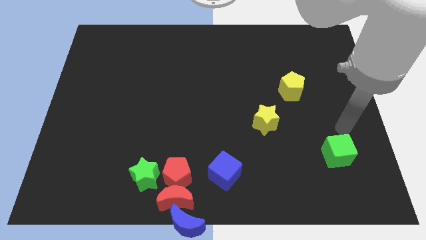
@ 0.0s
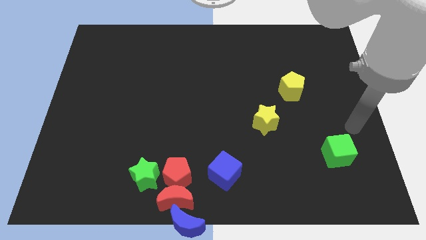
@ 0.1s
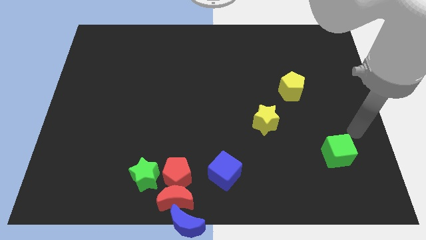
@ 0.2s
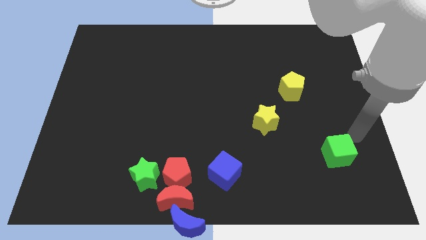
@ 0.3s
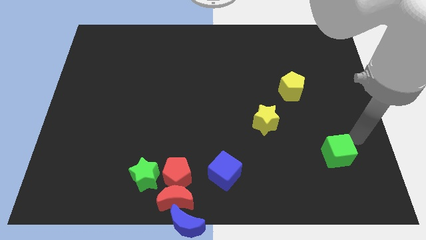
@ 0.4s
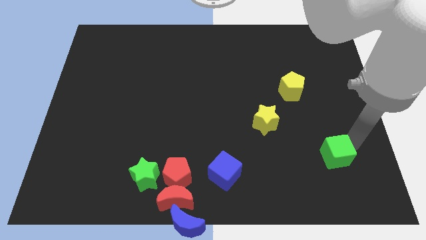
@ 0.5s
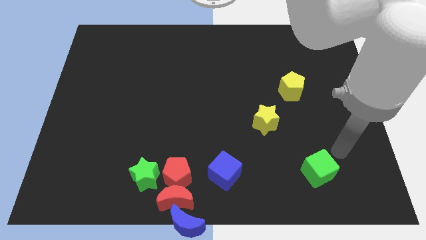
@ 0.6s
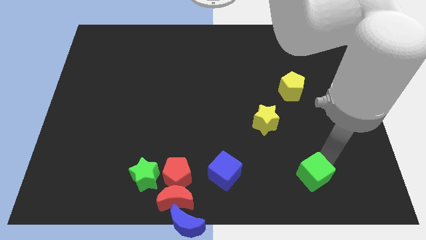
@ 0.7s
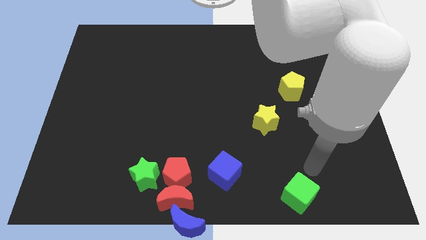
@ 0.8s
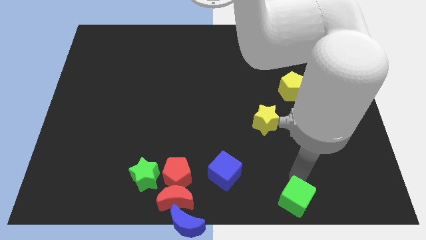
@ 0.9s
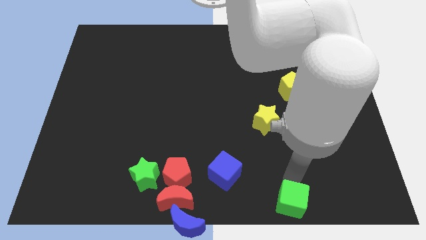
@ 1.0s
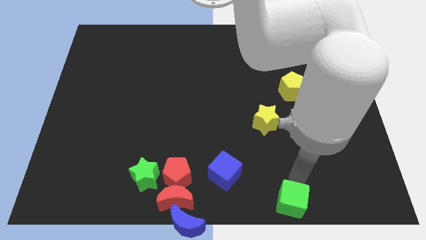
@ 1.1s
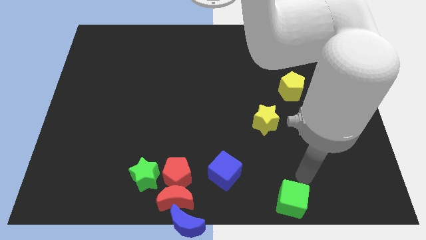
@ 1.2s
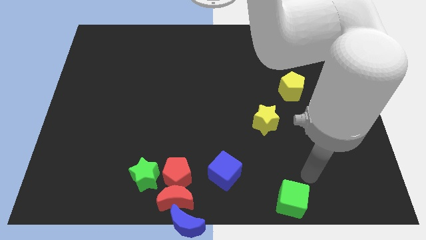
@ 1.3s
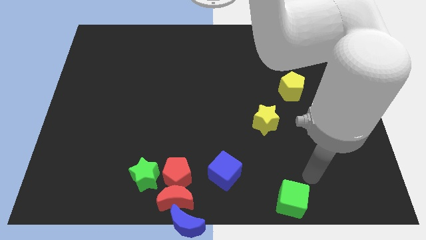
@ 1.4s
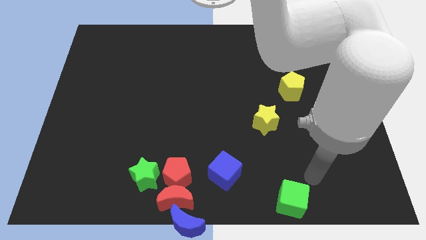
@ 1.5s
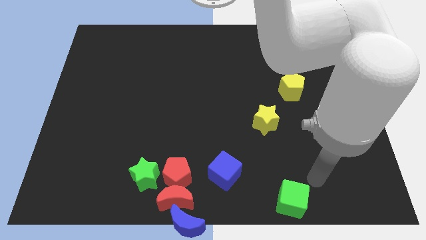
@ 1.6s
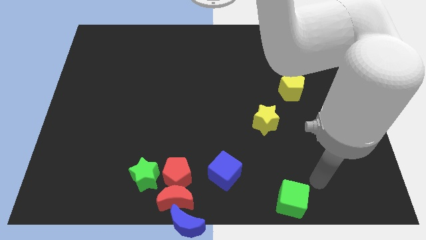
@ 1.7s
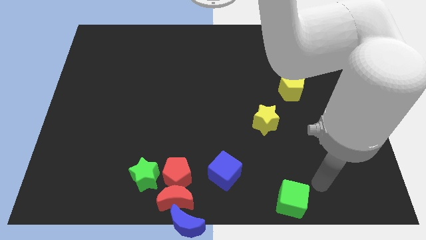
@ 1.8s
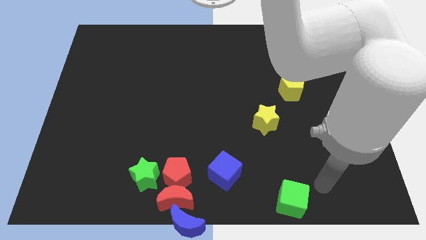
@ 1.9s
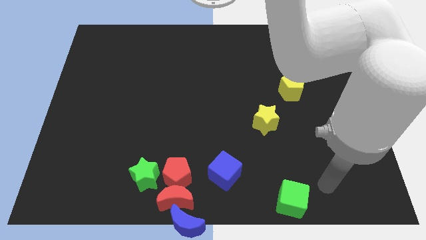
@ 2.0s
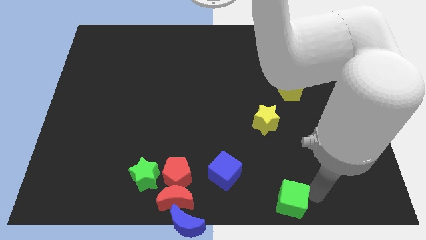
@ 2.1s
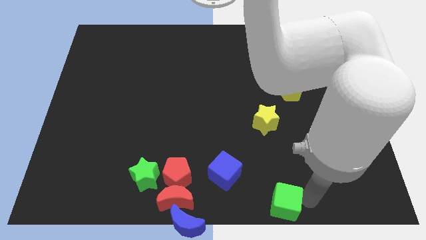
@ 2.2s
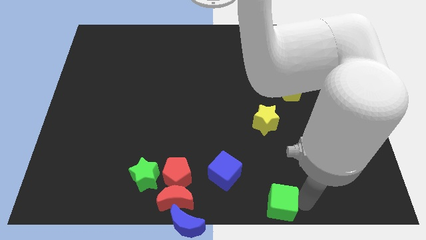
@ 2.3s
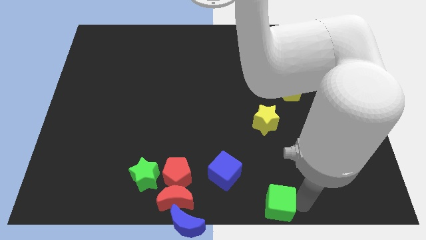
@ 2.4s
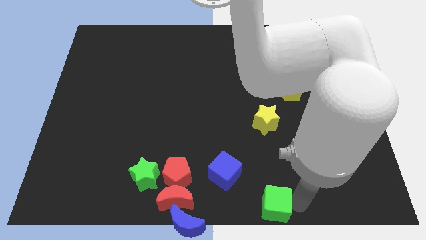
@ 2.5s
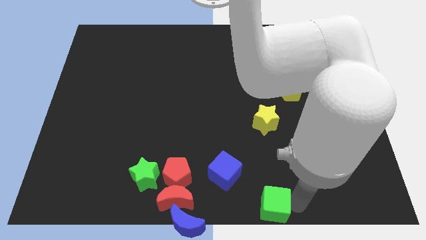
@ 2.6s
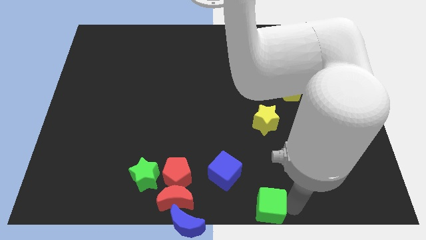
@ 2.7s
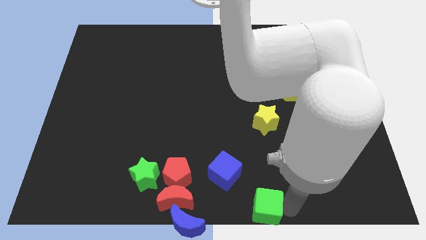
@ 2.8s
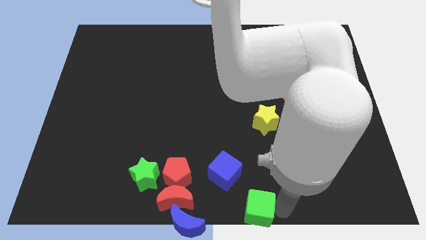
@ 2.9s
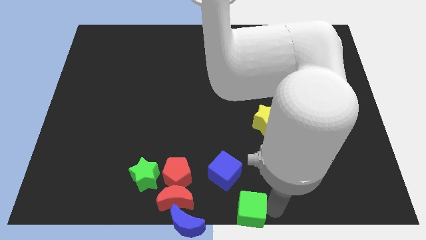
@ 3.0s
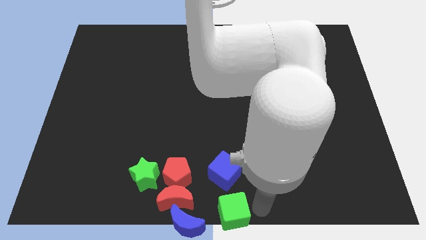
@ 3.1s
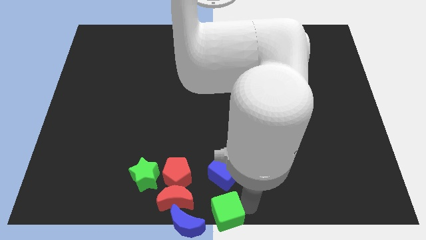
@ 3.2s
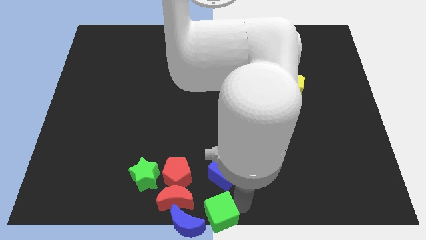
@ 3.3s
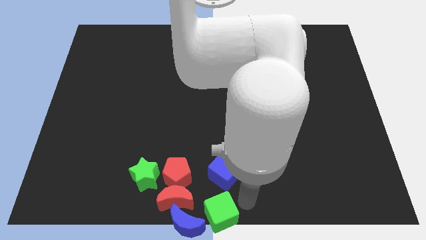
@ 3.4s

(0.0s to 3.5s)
move the green cube to the bottom center corner of the board

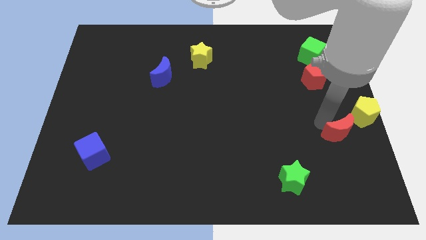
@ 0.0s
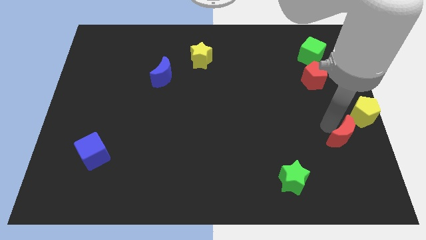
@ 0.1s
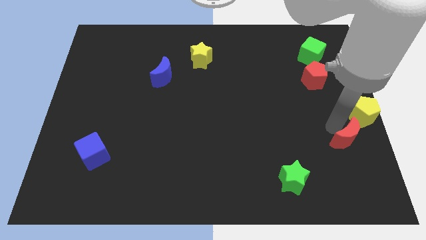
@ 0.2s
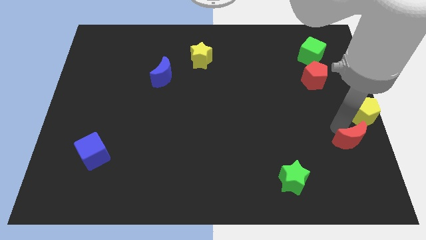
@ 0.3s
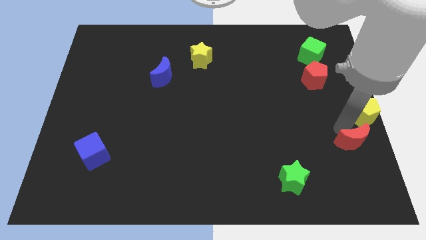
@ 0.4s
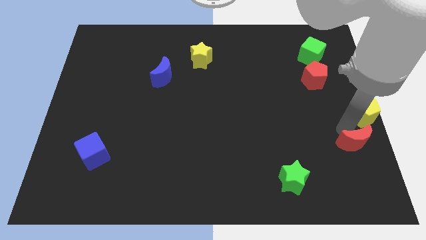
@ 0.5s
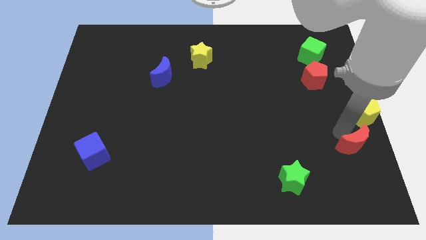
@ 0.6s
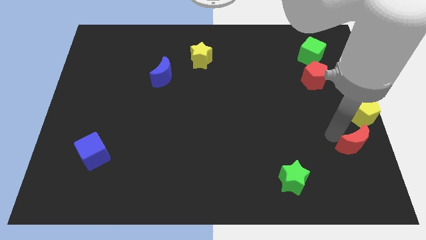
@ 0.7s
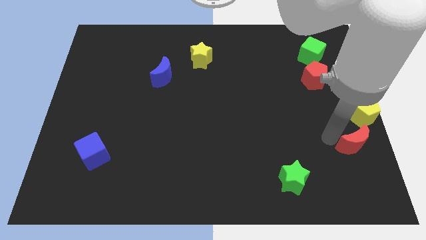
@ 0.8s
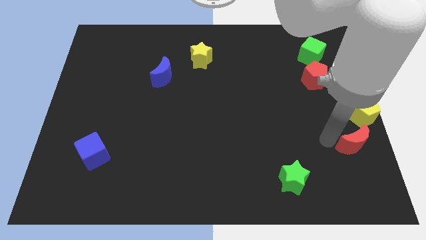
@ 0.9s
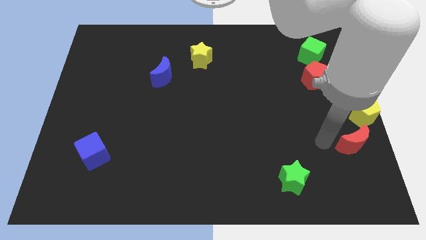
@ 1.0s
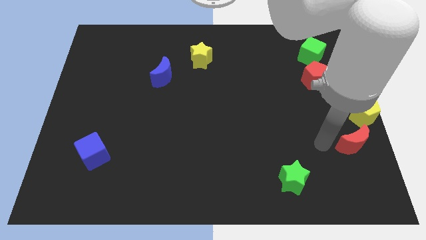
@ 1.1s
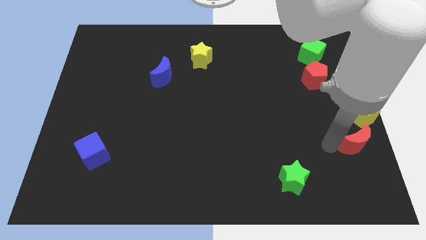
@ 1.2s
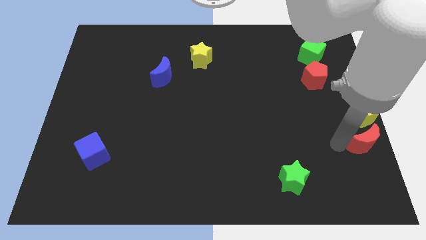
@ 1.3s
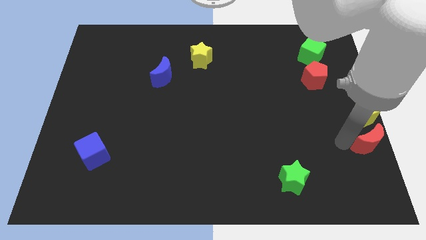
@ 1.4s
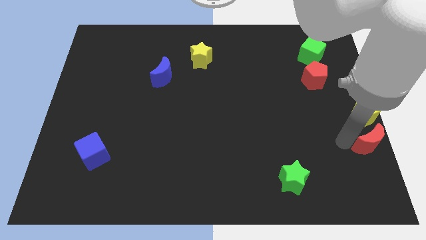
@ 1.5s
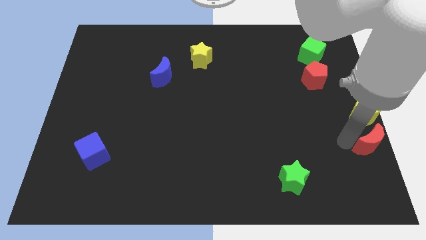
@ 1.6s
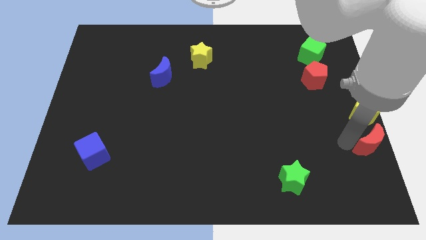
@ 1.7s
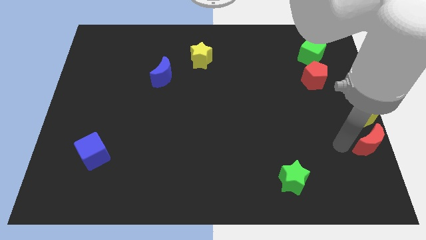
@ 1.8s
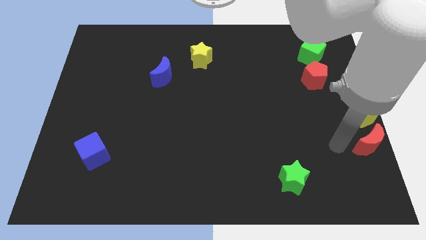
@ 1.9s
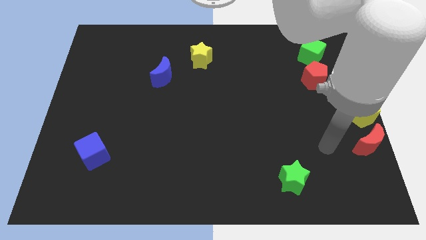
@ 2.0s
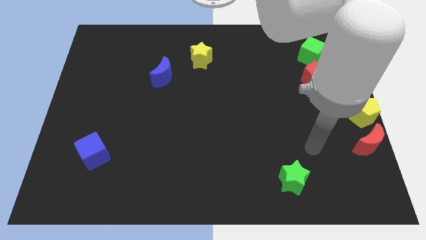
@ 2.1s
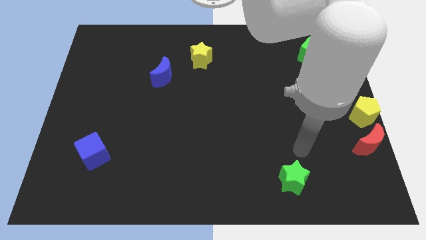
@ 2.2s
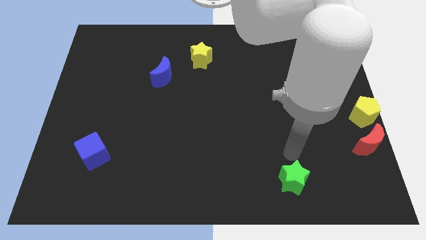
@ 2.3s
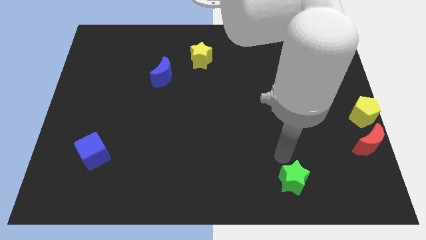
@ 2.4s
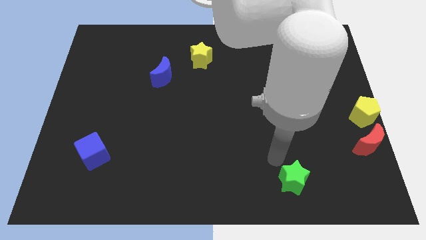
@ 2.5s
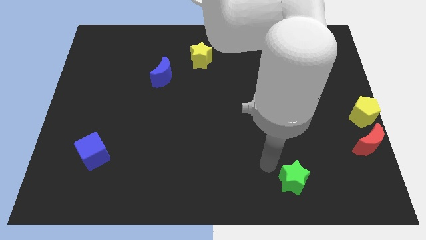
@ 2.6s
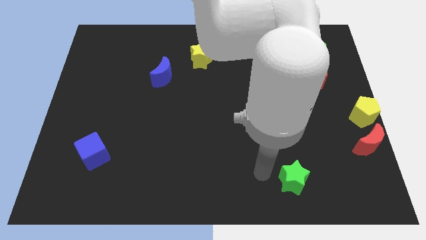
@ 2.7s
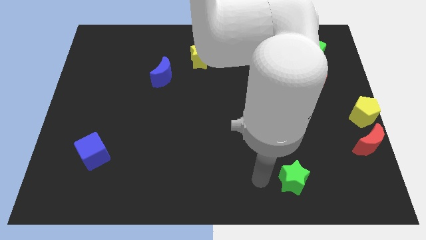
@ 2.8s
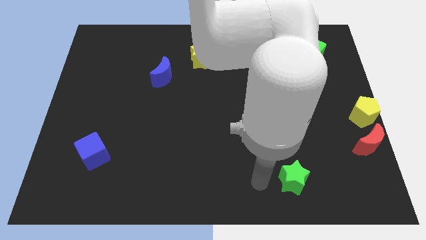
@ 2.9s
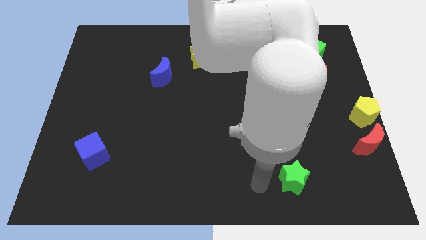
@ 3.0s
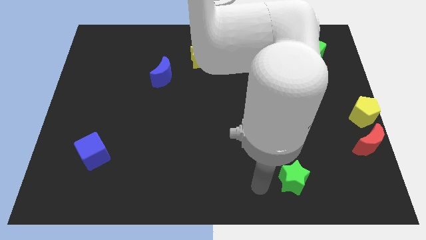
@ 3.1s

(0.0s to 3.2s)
move the red moon bottom of the yellow pentagon

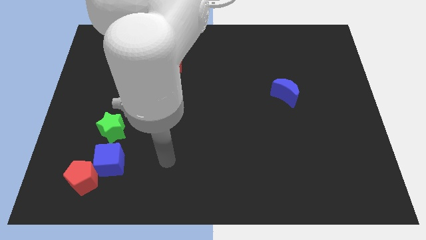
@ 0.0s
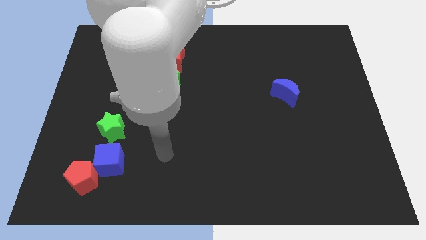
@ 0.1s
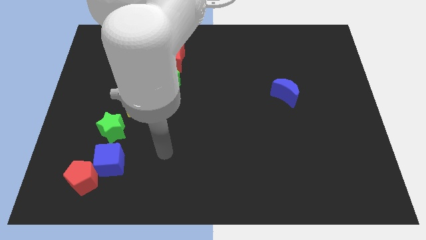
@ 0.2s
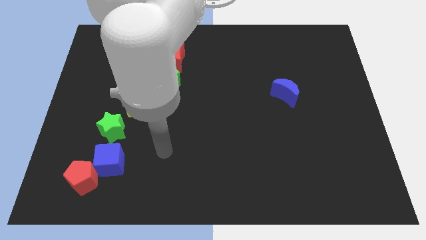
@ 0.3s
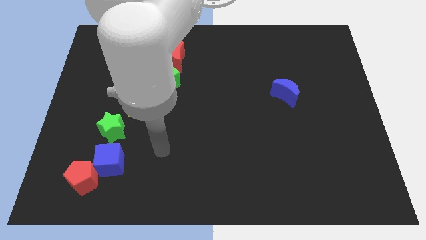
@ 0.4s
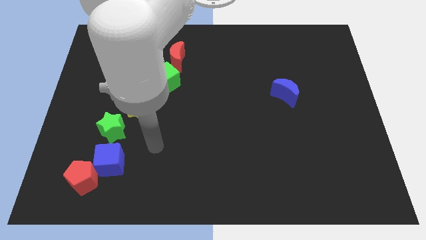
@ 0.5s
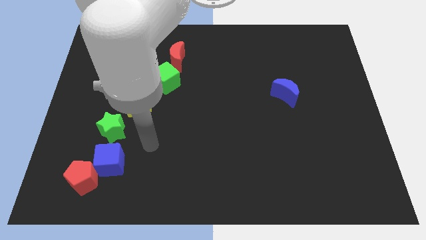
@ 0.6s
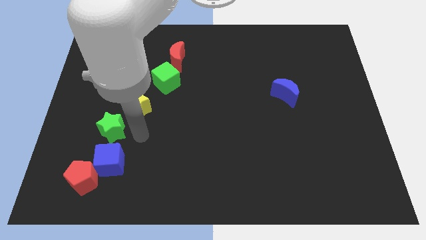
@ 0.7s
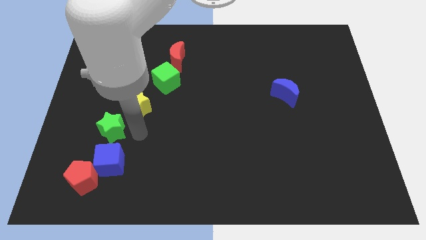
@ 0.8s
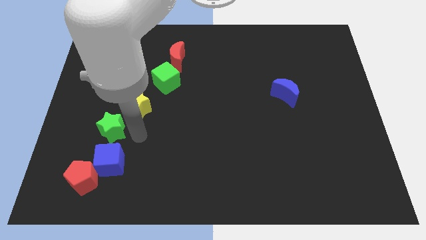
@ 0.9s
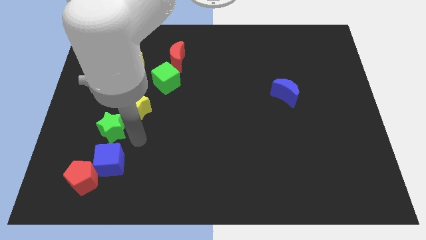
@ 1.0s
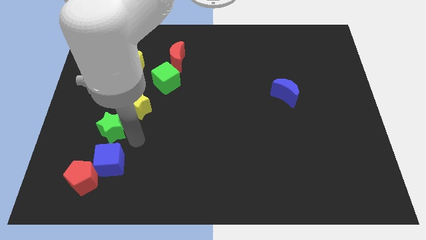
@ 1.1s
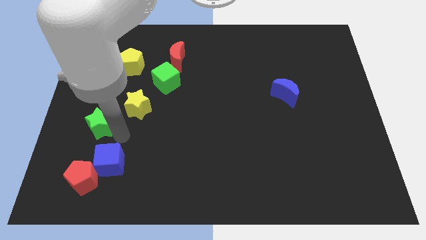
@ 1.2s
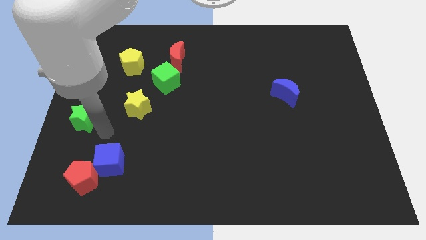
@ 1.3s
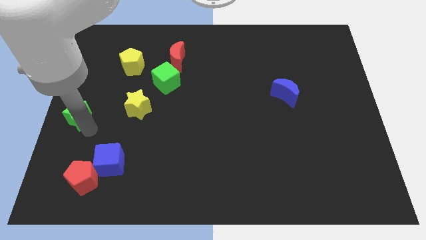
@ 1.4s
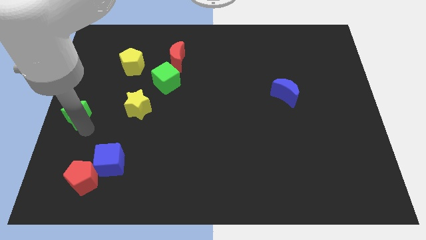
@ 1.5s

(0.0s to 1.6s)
move the green star towards the center left of the table

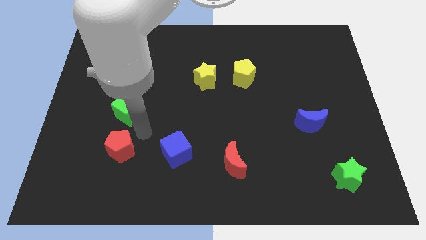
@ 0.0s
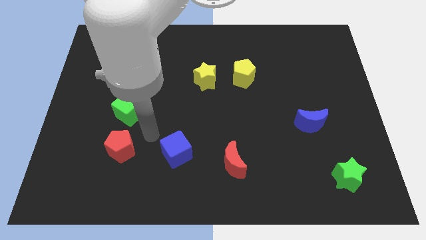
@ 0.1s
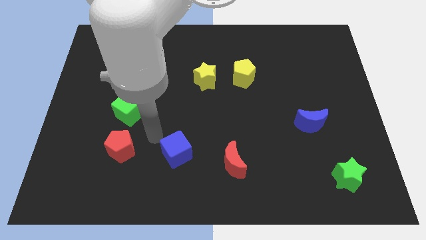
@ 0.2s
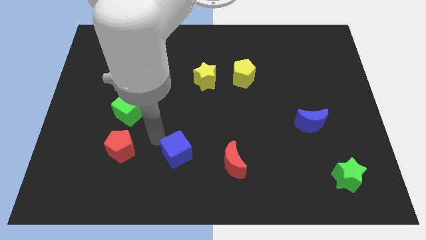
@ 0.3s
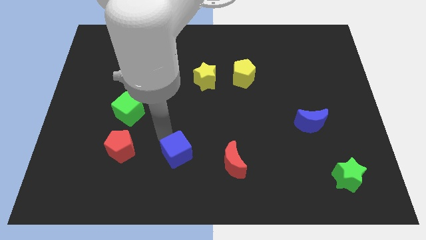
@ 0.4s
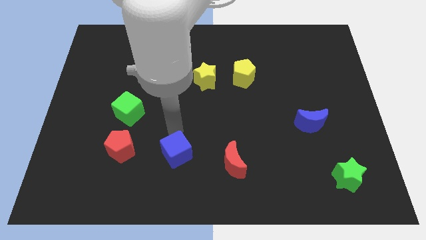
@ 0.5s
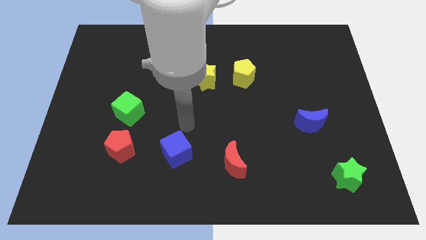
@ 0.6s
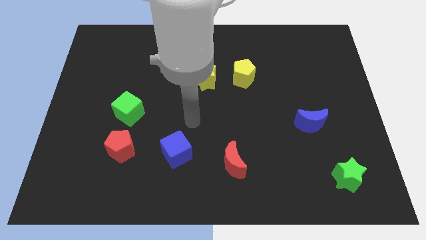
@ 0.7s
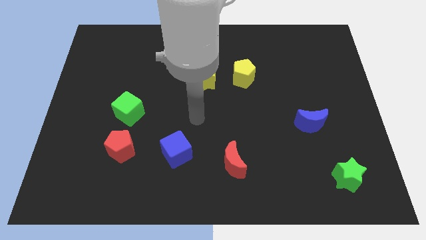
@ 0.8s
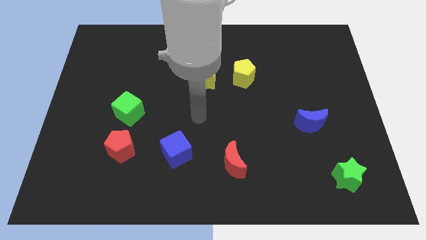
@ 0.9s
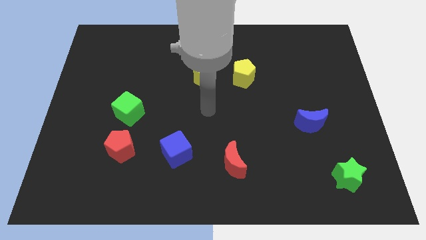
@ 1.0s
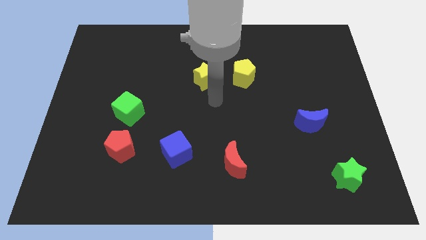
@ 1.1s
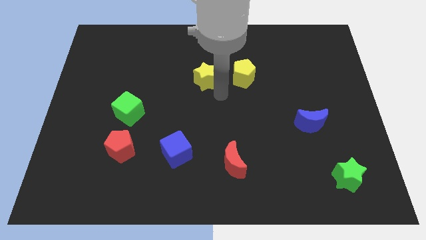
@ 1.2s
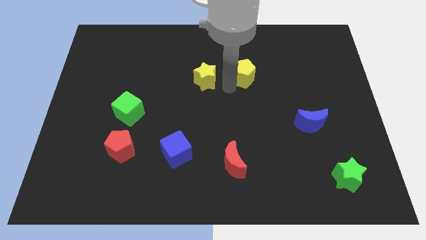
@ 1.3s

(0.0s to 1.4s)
move your arm towards the yellow pentagon
